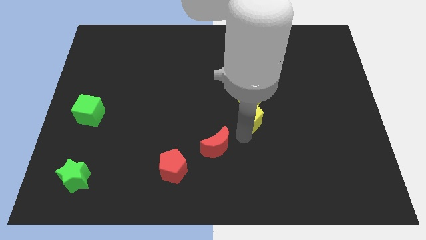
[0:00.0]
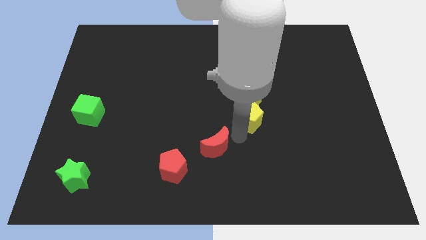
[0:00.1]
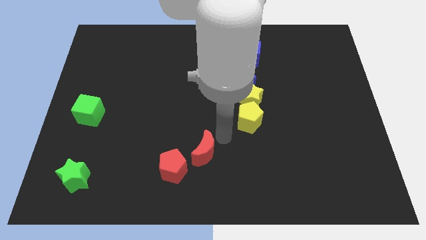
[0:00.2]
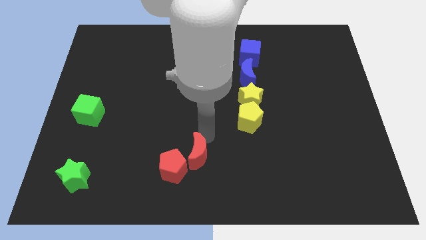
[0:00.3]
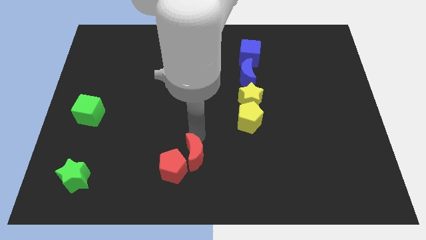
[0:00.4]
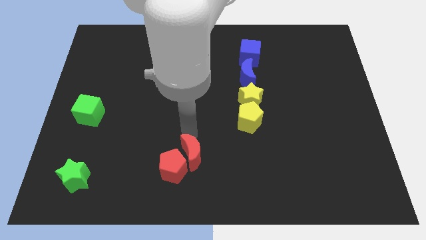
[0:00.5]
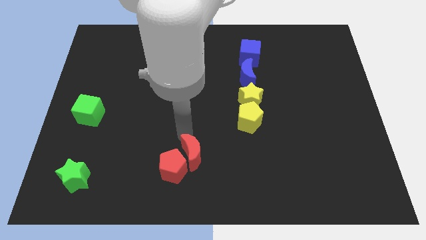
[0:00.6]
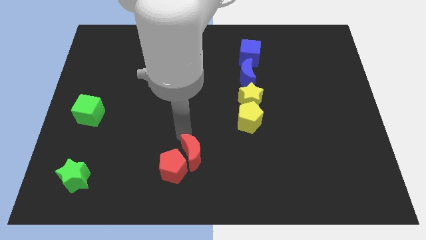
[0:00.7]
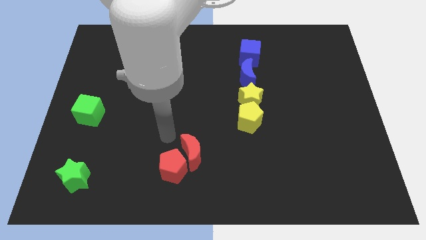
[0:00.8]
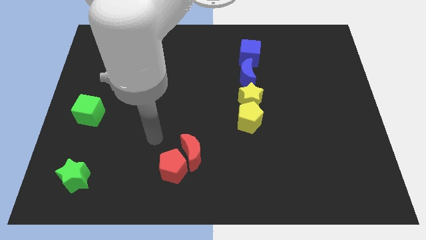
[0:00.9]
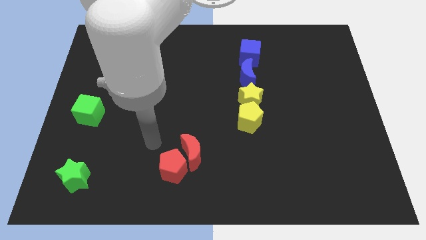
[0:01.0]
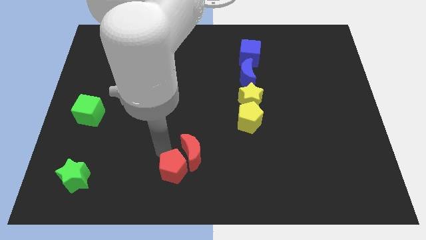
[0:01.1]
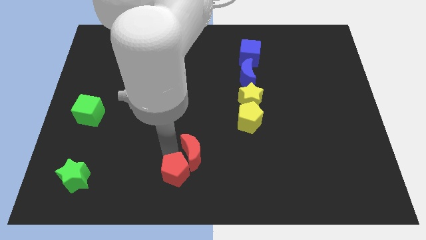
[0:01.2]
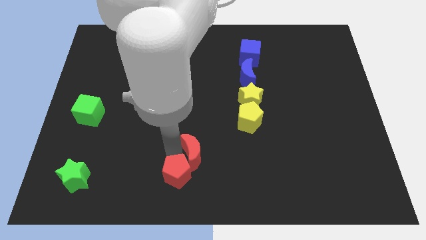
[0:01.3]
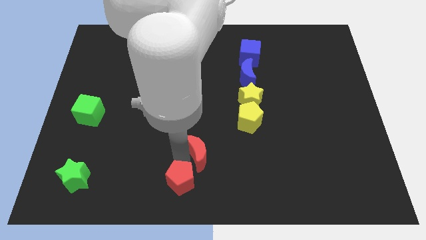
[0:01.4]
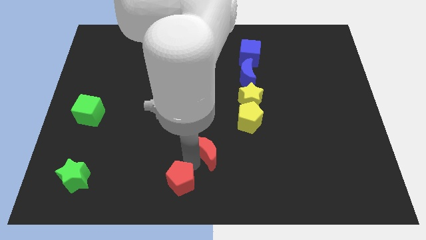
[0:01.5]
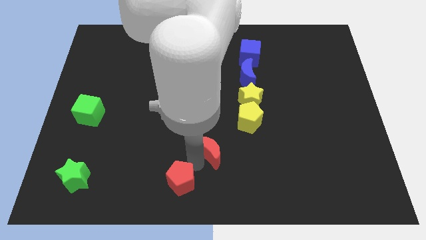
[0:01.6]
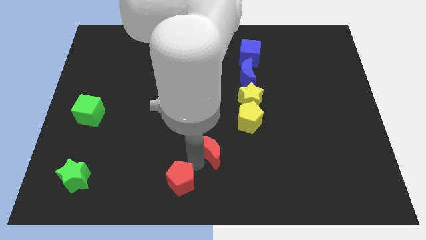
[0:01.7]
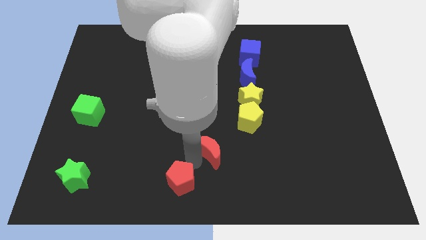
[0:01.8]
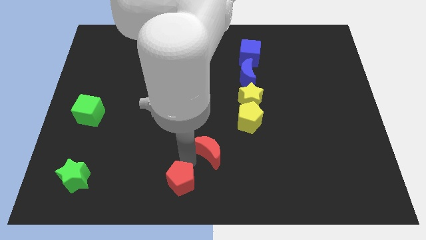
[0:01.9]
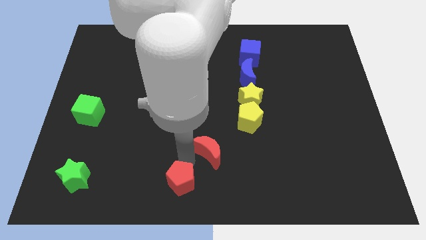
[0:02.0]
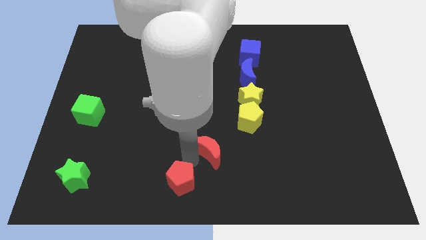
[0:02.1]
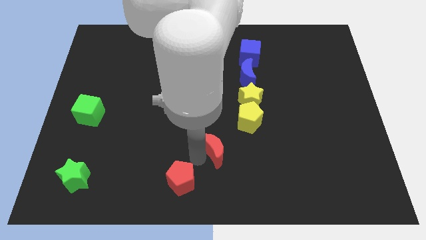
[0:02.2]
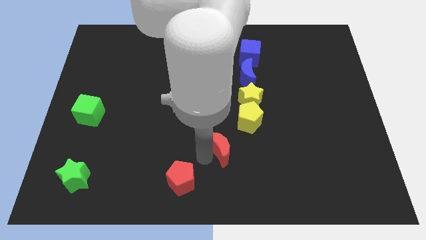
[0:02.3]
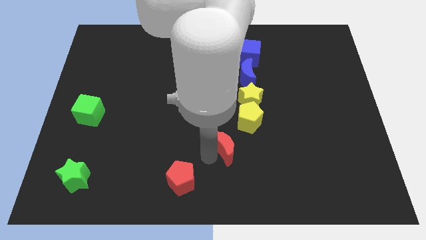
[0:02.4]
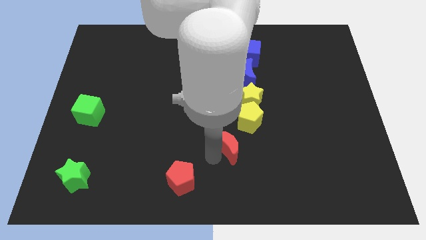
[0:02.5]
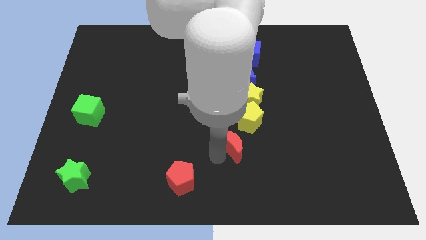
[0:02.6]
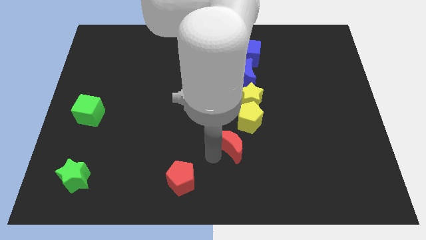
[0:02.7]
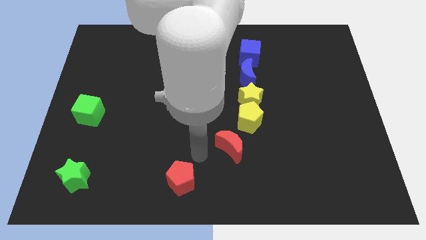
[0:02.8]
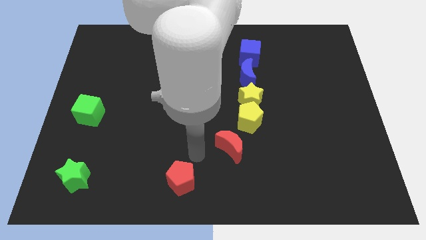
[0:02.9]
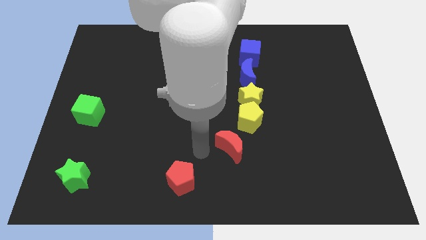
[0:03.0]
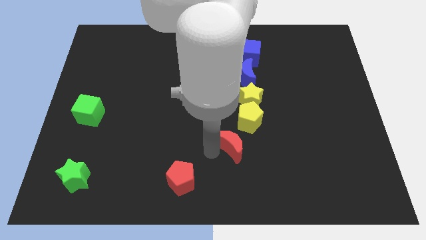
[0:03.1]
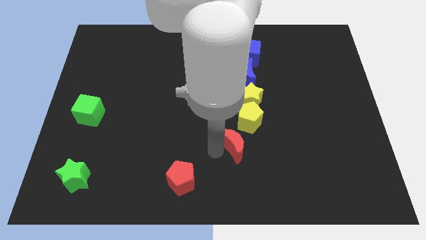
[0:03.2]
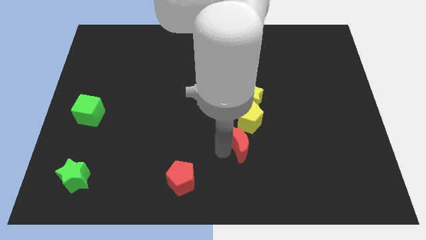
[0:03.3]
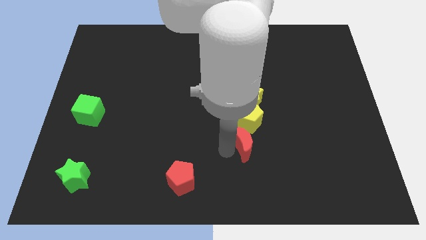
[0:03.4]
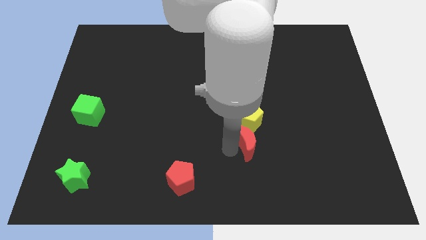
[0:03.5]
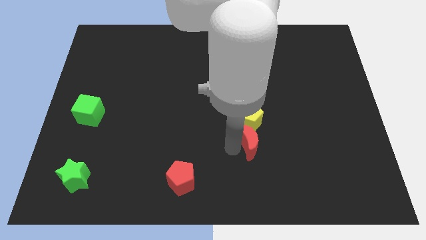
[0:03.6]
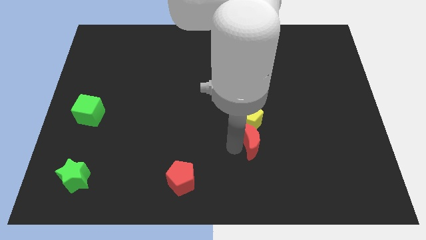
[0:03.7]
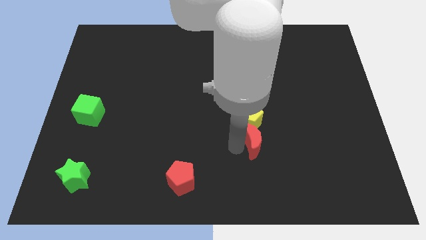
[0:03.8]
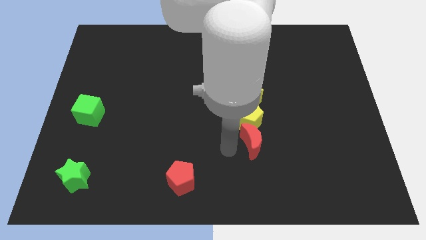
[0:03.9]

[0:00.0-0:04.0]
move the red crescent close to the bottom side of the yellow pentagon

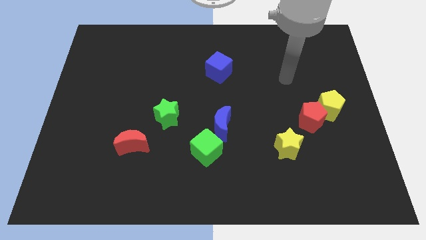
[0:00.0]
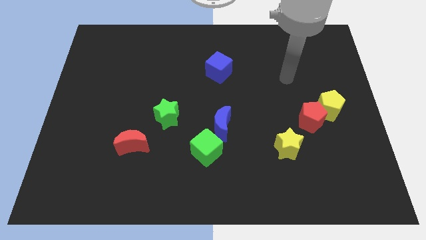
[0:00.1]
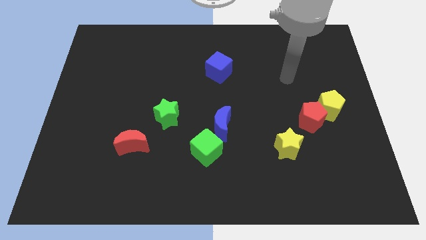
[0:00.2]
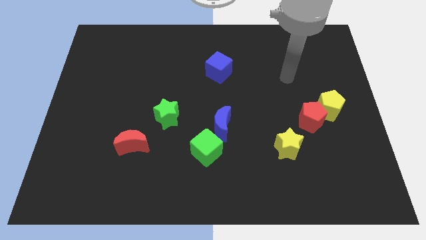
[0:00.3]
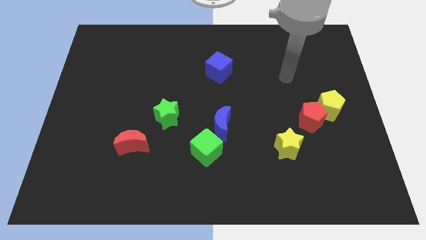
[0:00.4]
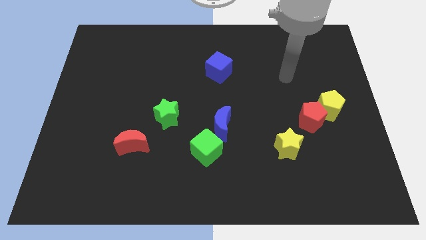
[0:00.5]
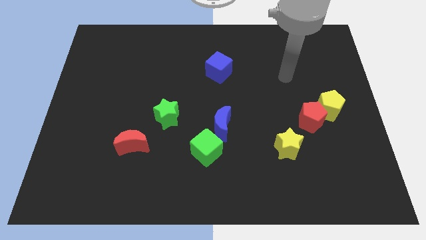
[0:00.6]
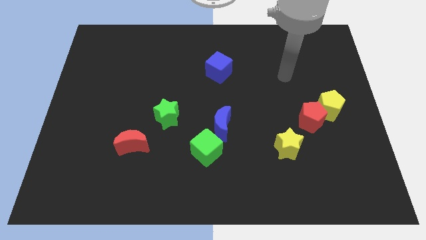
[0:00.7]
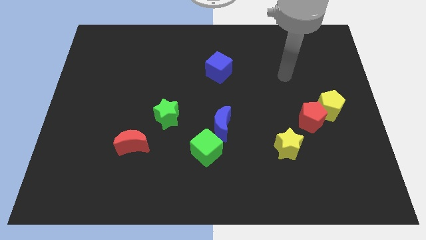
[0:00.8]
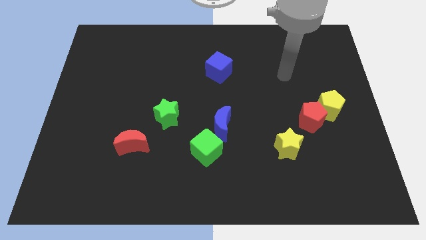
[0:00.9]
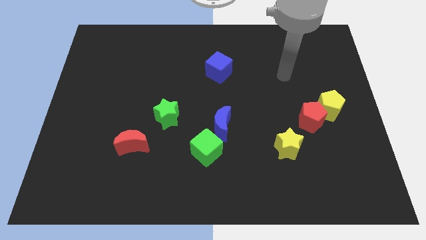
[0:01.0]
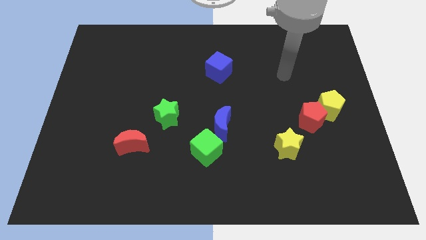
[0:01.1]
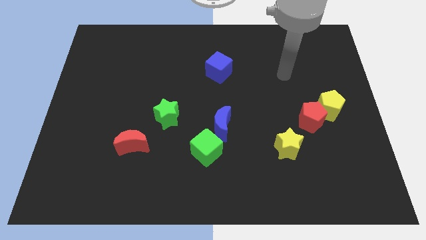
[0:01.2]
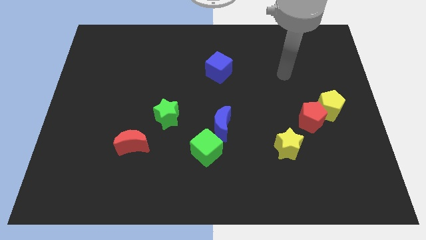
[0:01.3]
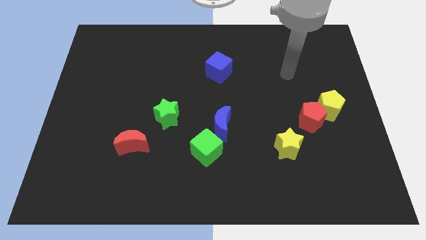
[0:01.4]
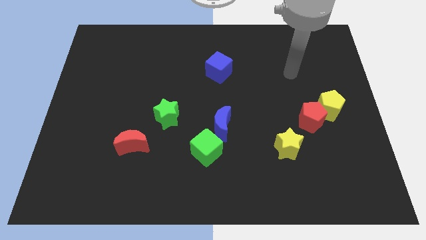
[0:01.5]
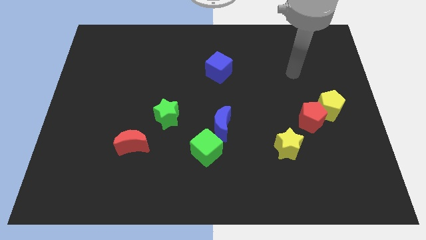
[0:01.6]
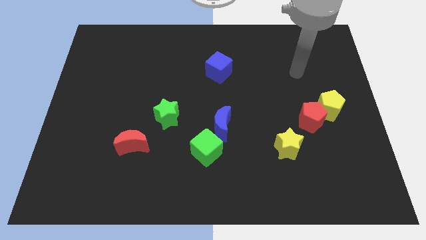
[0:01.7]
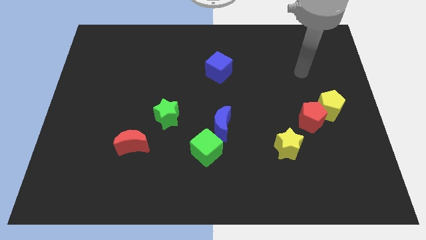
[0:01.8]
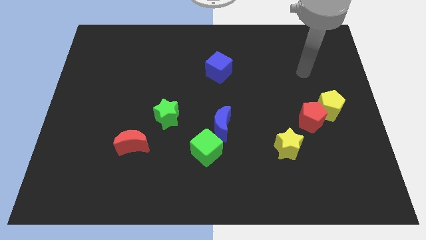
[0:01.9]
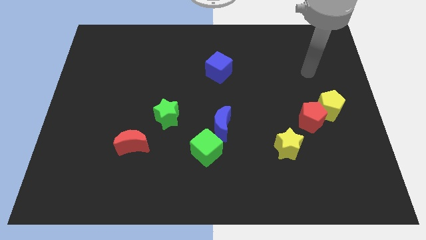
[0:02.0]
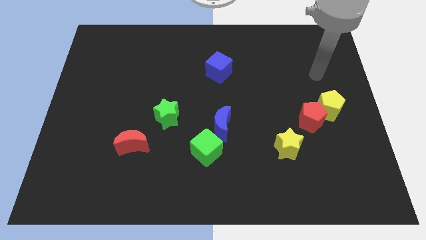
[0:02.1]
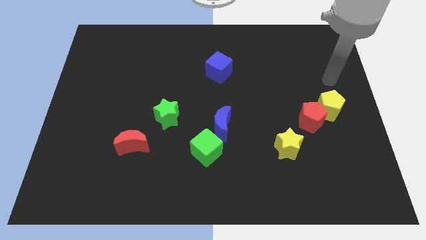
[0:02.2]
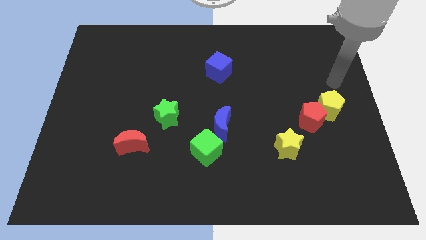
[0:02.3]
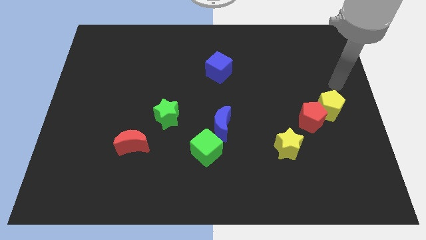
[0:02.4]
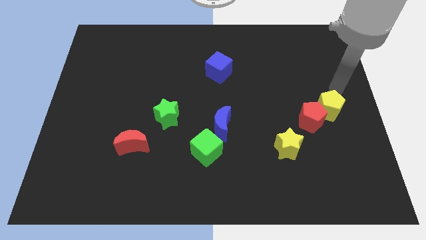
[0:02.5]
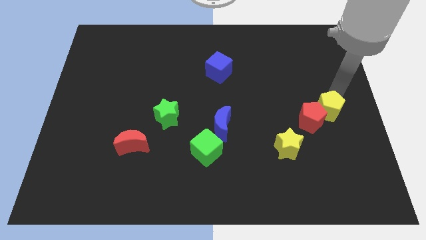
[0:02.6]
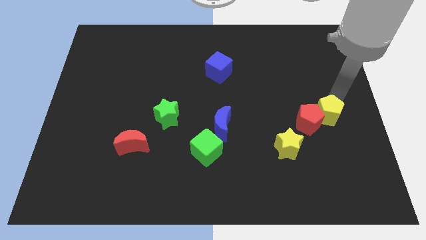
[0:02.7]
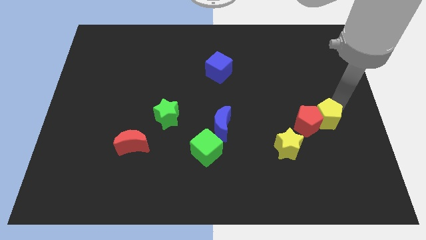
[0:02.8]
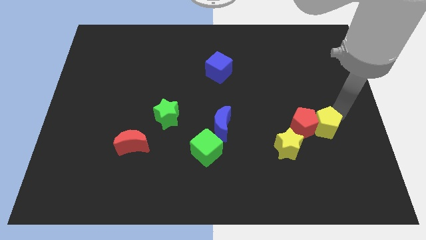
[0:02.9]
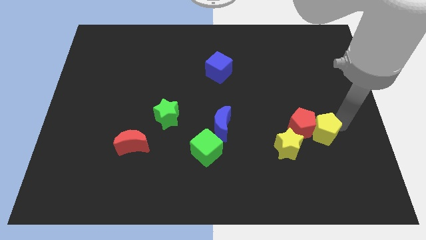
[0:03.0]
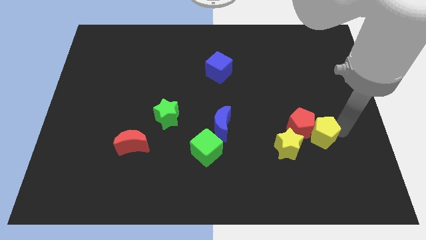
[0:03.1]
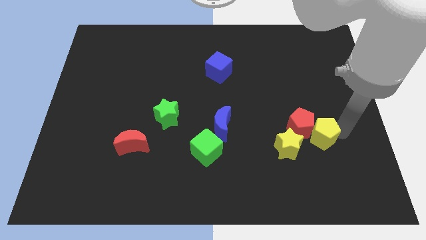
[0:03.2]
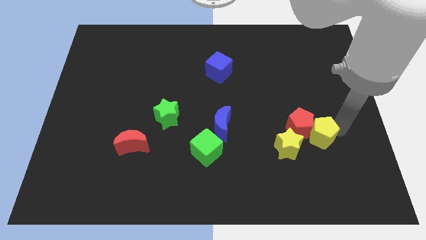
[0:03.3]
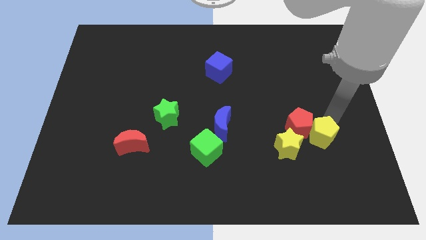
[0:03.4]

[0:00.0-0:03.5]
push the yellow pentagon towards the down

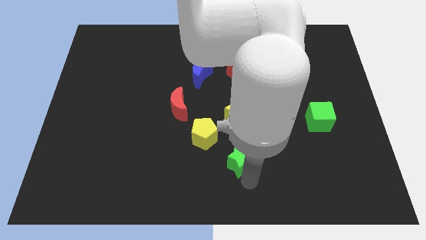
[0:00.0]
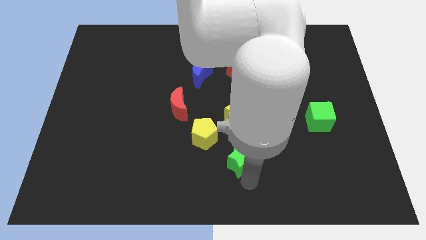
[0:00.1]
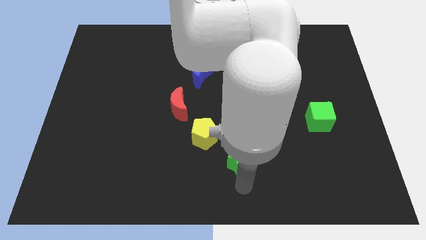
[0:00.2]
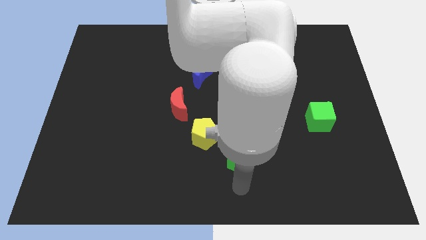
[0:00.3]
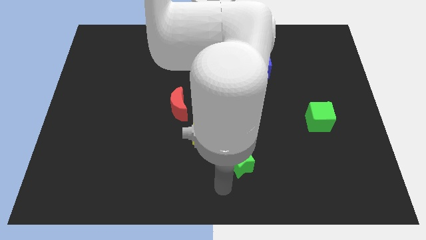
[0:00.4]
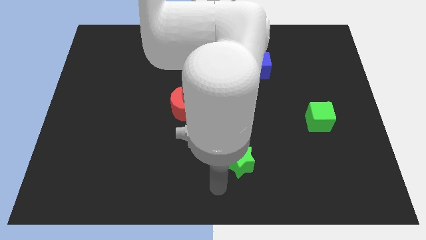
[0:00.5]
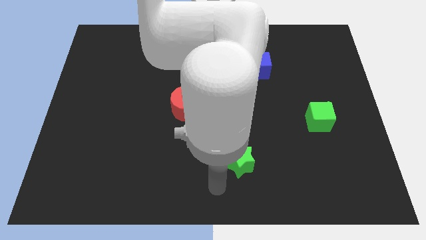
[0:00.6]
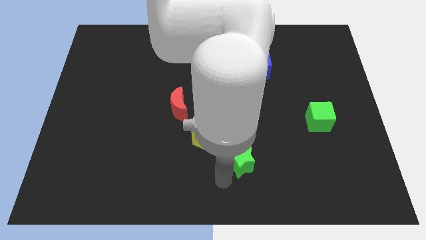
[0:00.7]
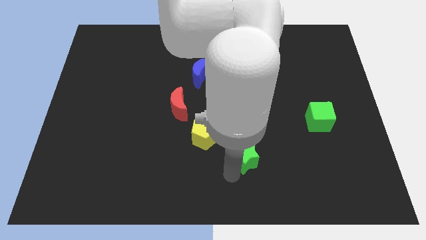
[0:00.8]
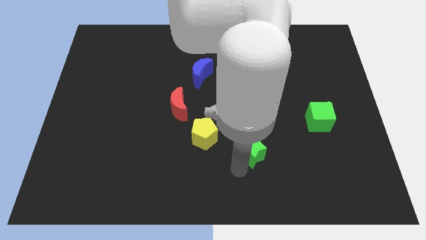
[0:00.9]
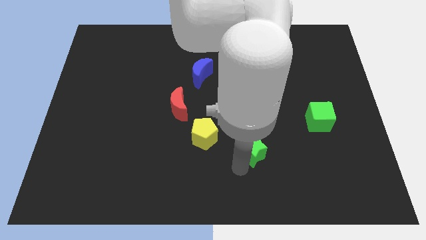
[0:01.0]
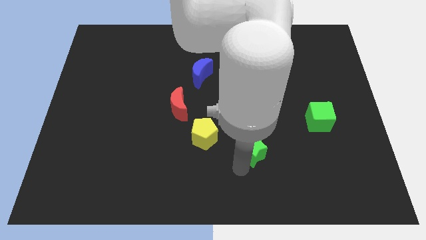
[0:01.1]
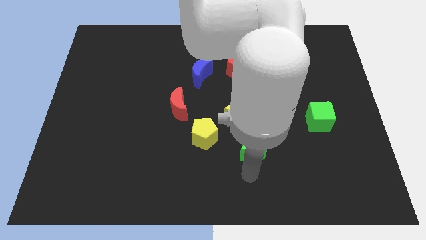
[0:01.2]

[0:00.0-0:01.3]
push green star slightly upwards

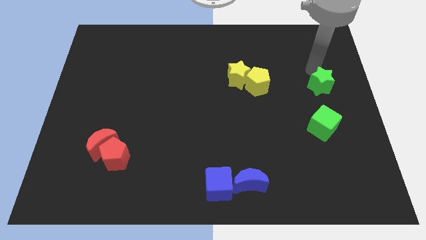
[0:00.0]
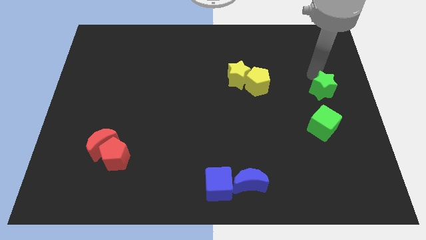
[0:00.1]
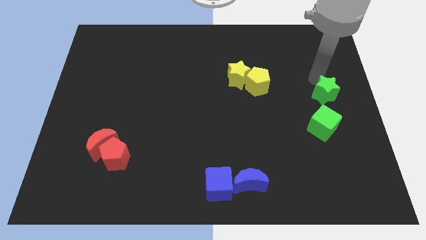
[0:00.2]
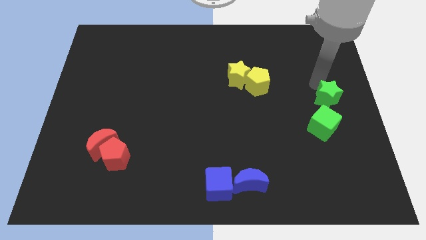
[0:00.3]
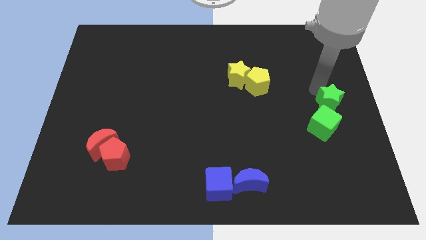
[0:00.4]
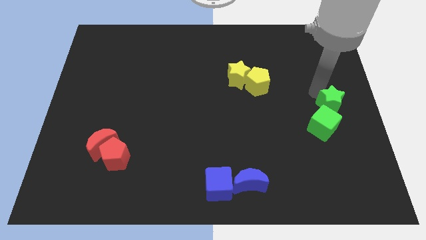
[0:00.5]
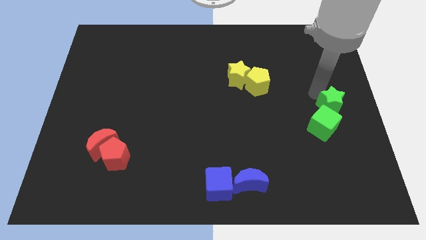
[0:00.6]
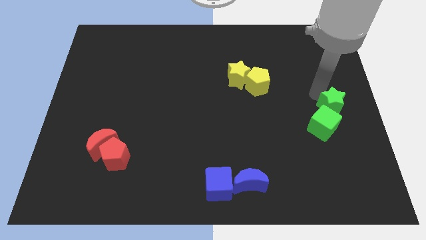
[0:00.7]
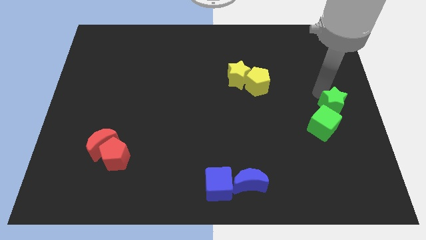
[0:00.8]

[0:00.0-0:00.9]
move the green star above the green cube
